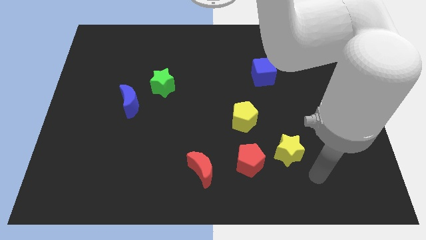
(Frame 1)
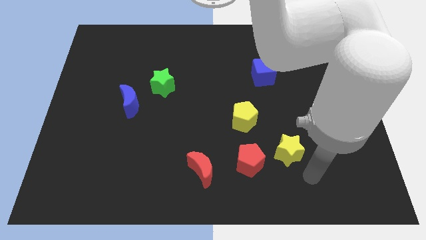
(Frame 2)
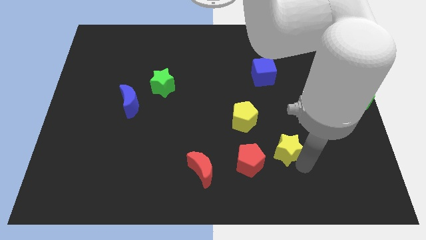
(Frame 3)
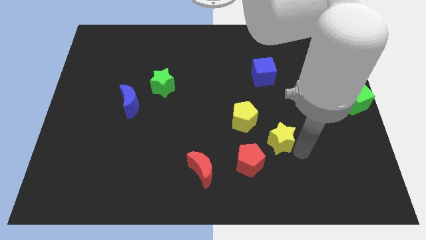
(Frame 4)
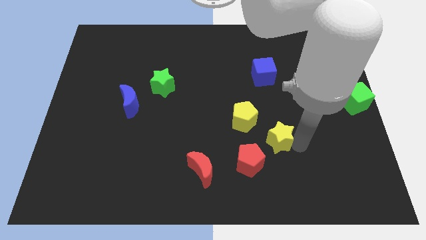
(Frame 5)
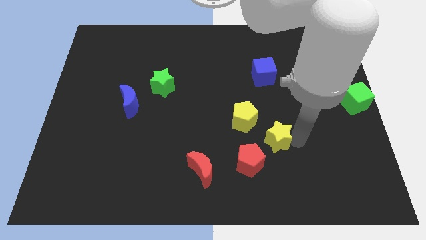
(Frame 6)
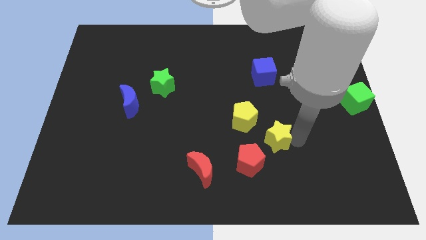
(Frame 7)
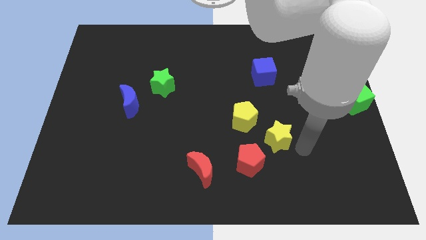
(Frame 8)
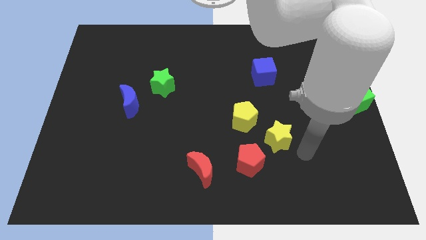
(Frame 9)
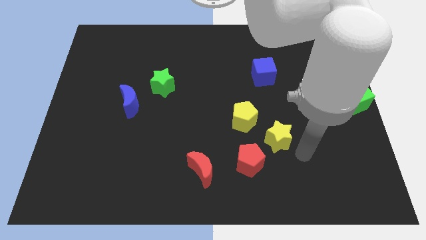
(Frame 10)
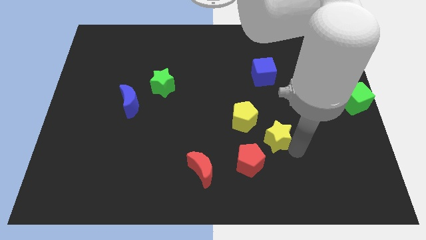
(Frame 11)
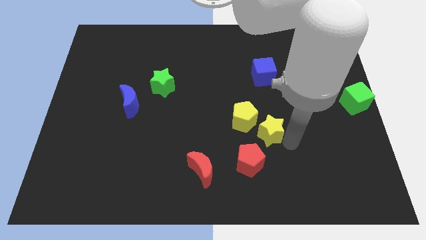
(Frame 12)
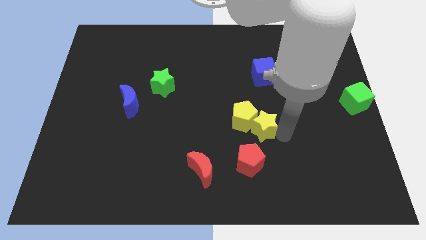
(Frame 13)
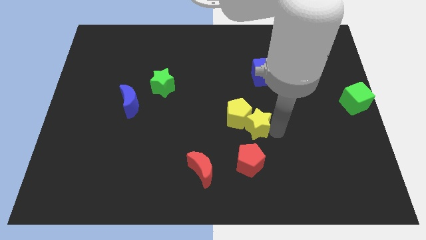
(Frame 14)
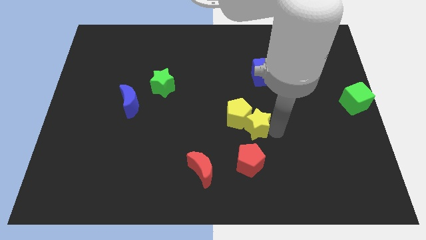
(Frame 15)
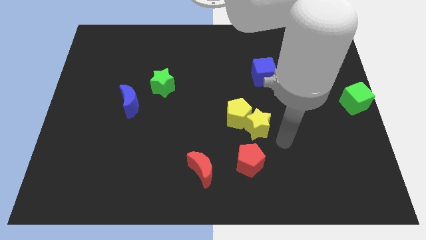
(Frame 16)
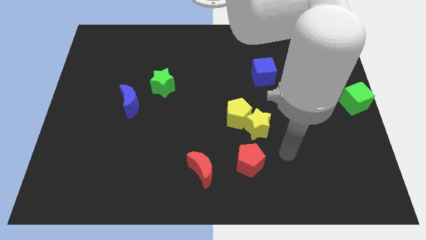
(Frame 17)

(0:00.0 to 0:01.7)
move the yellow star into the yellow pentagon

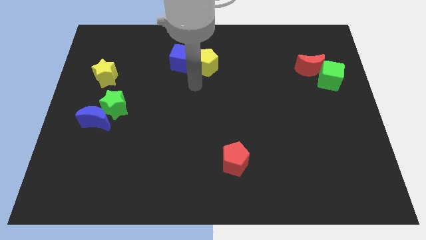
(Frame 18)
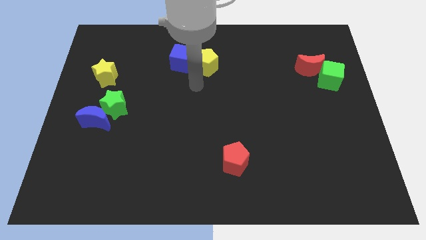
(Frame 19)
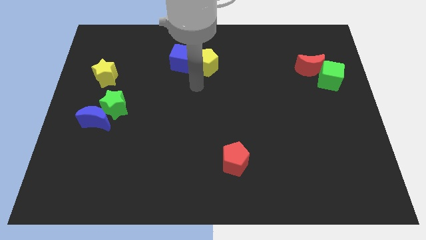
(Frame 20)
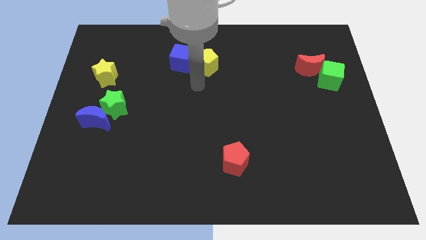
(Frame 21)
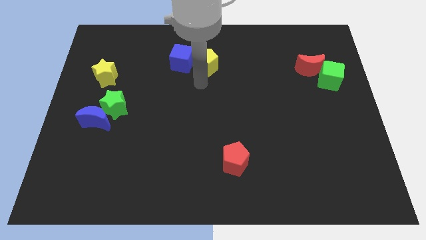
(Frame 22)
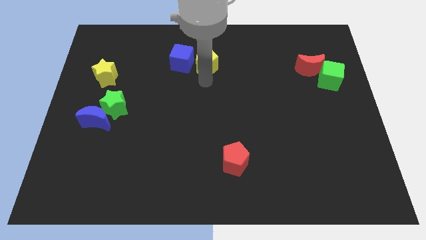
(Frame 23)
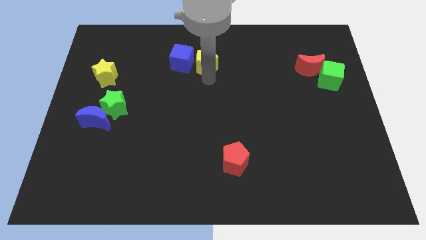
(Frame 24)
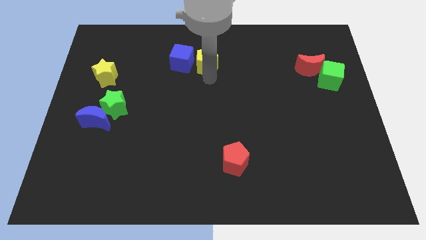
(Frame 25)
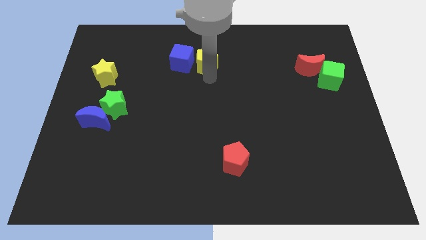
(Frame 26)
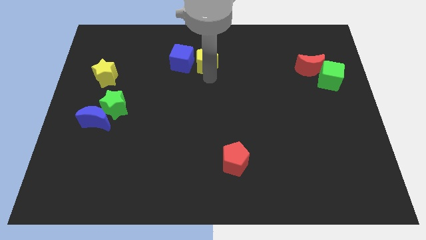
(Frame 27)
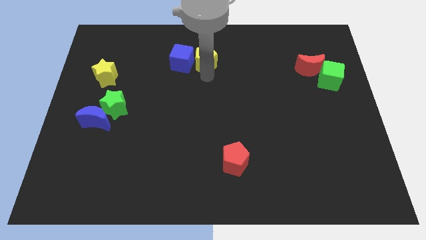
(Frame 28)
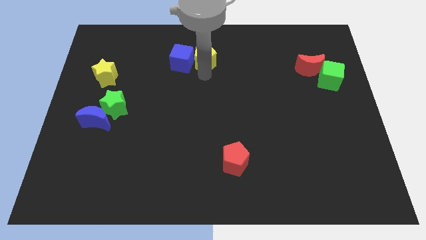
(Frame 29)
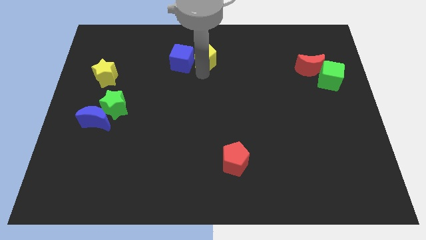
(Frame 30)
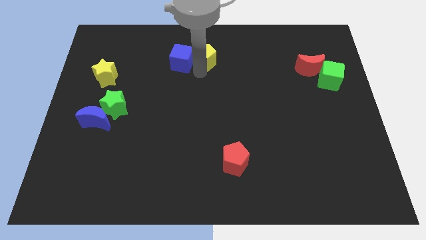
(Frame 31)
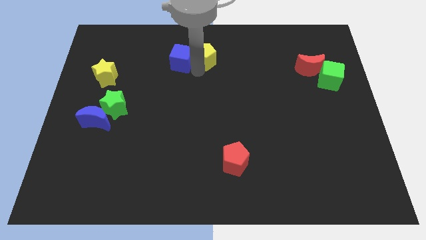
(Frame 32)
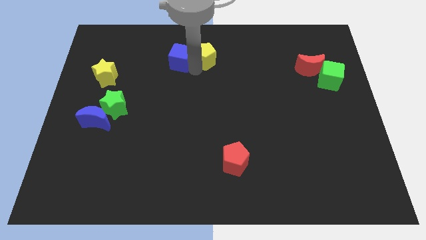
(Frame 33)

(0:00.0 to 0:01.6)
push the yellow pentagon slightly to the top

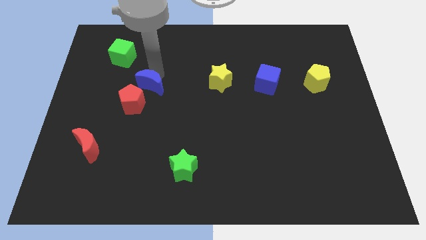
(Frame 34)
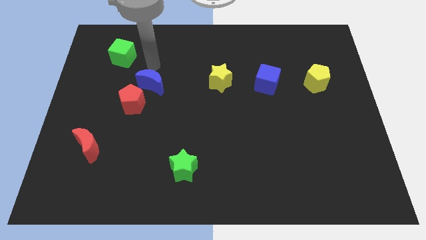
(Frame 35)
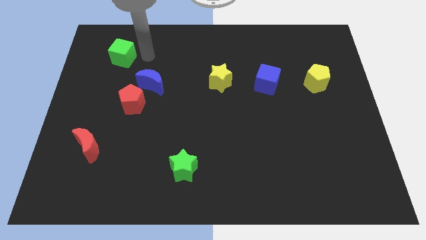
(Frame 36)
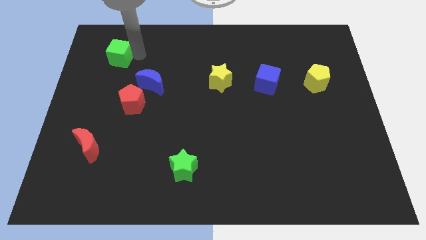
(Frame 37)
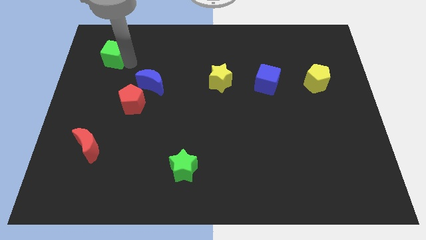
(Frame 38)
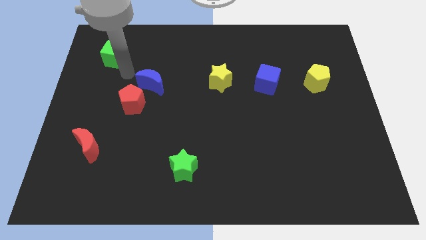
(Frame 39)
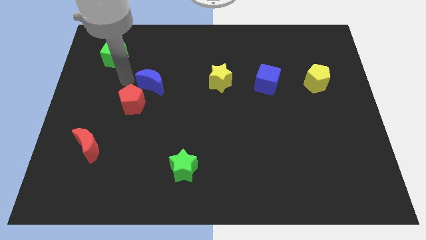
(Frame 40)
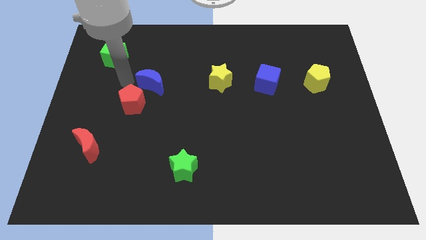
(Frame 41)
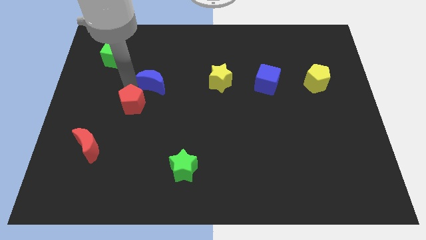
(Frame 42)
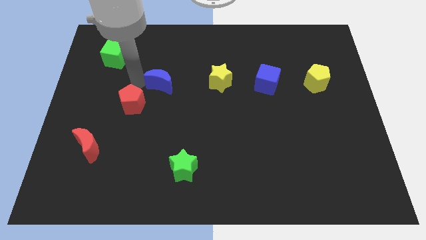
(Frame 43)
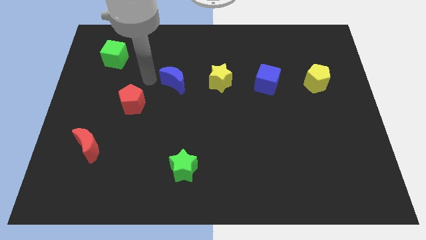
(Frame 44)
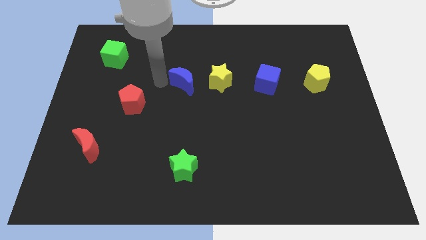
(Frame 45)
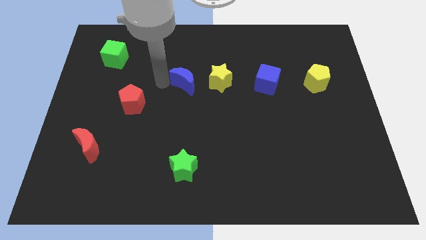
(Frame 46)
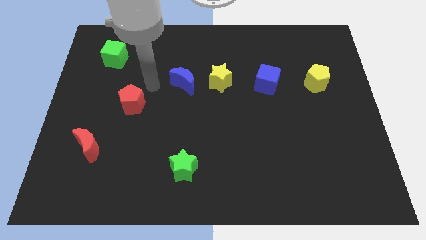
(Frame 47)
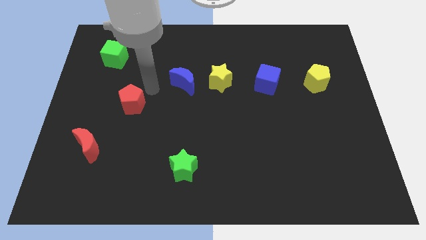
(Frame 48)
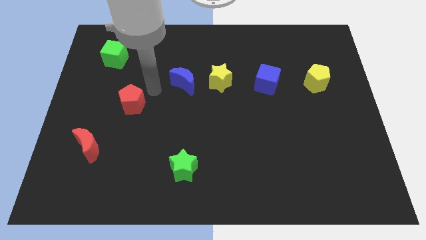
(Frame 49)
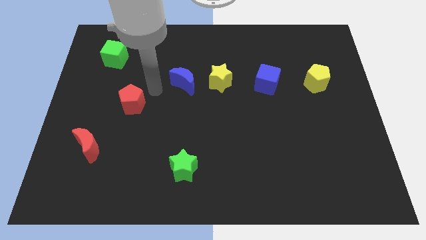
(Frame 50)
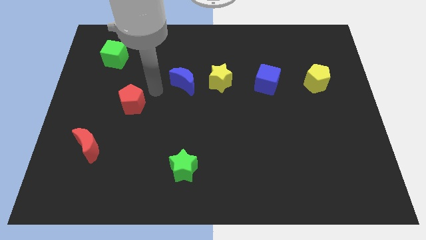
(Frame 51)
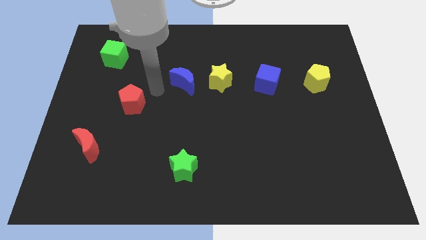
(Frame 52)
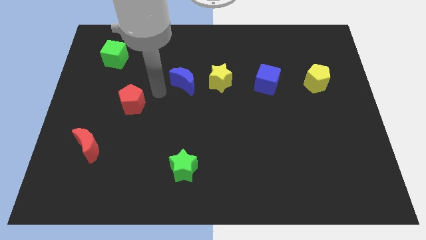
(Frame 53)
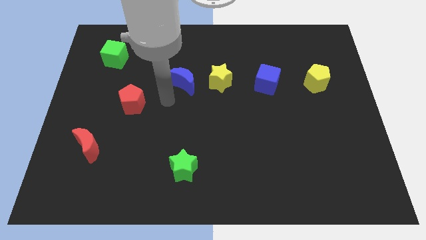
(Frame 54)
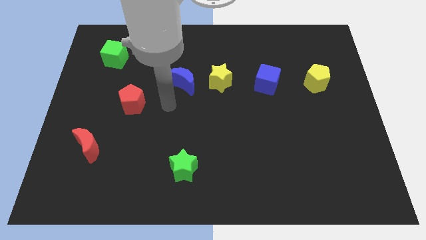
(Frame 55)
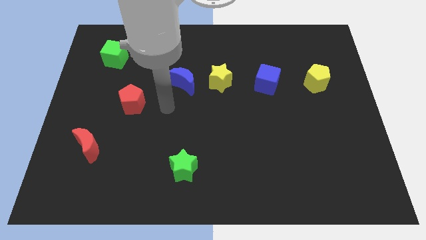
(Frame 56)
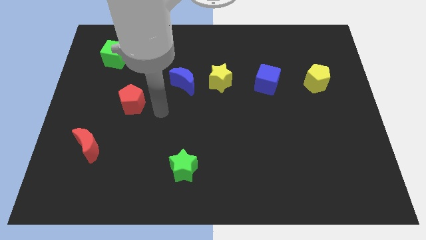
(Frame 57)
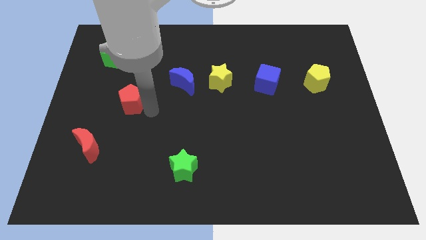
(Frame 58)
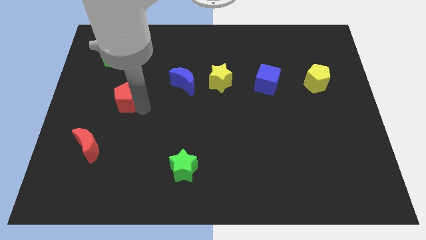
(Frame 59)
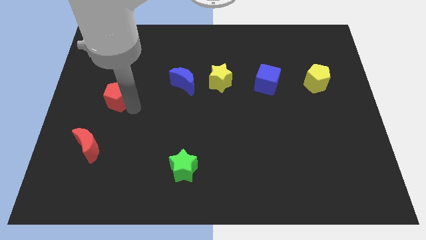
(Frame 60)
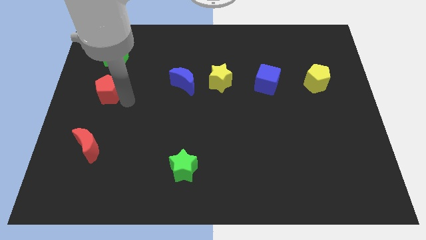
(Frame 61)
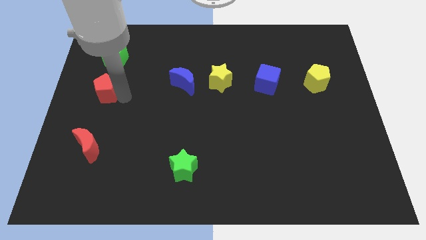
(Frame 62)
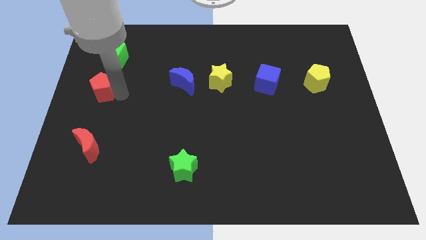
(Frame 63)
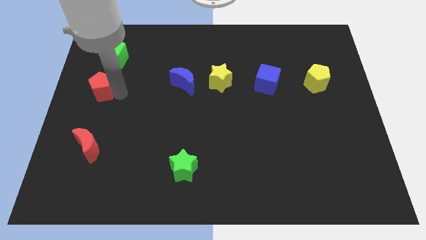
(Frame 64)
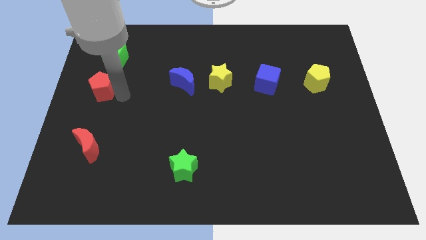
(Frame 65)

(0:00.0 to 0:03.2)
push red pentagon below green cube

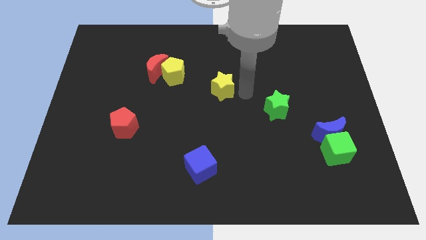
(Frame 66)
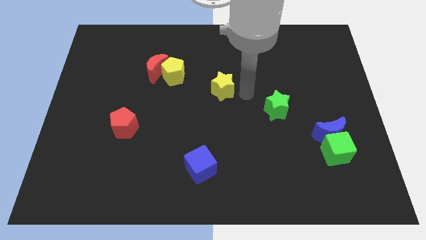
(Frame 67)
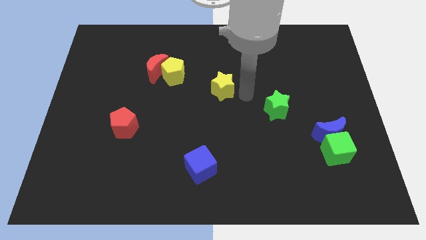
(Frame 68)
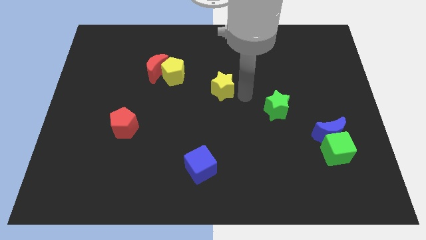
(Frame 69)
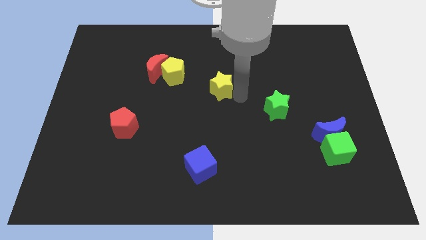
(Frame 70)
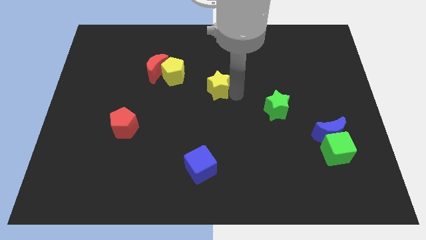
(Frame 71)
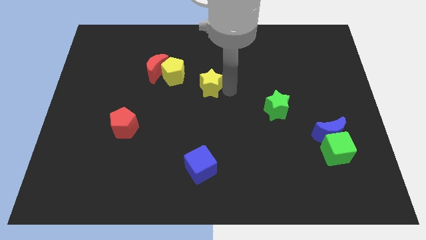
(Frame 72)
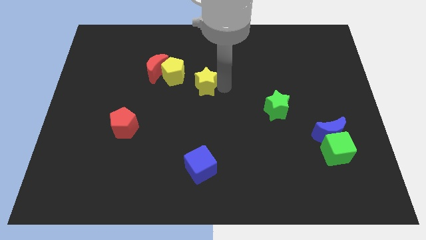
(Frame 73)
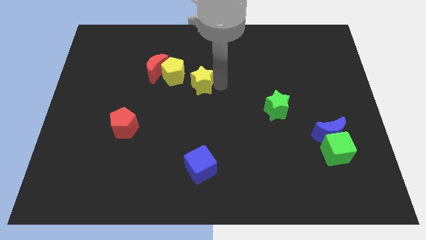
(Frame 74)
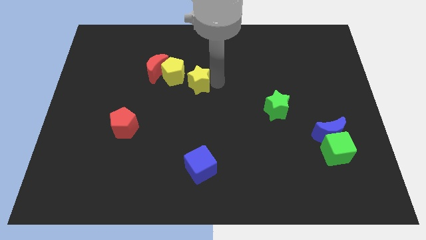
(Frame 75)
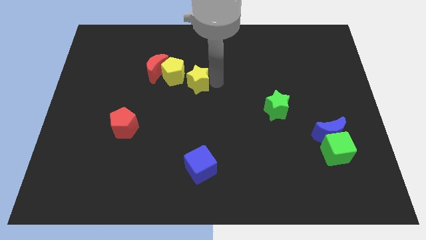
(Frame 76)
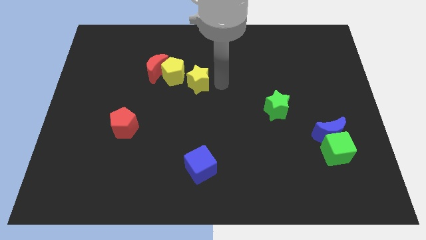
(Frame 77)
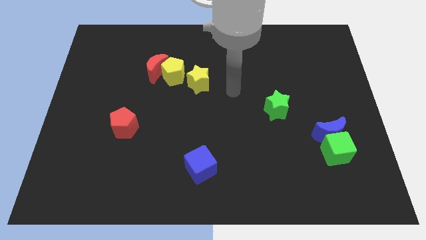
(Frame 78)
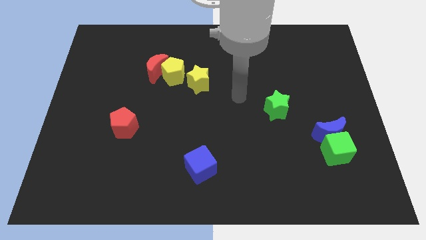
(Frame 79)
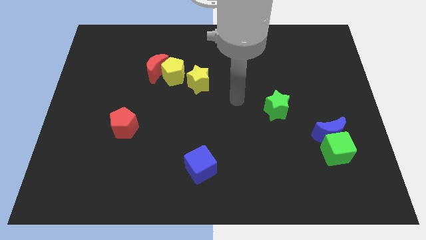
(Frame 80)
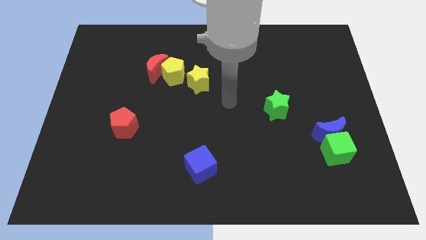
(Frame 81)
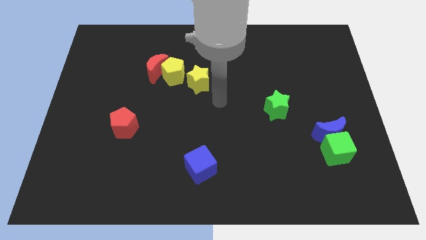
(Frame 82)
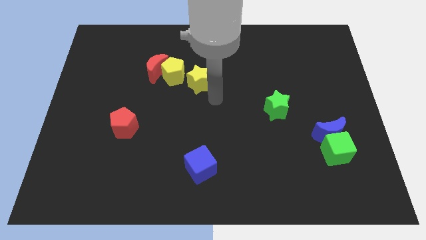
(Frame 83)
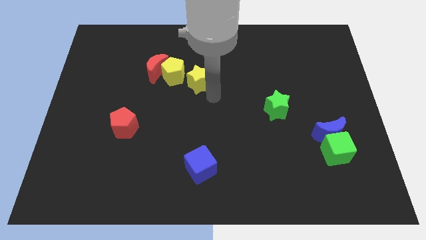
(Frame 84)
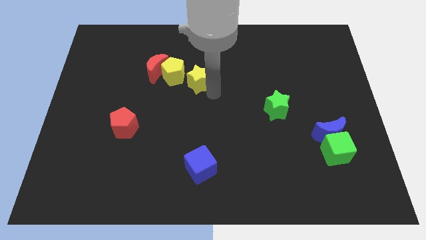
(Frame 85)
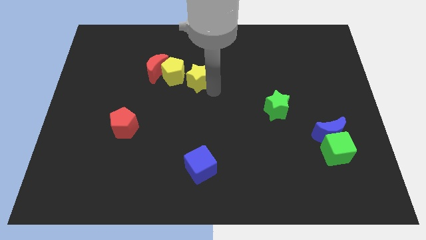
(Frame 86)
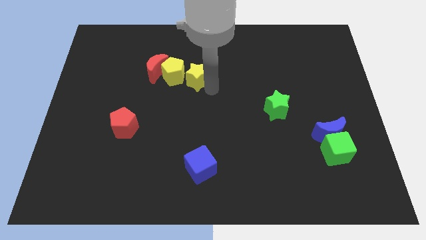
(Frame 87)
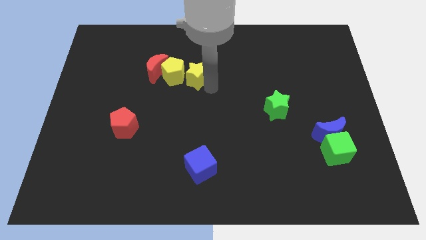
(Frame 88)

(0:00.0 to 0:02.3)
move the yellow star to the right side of the yellow pentagon

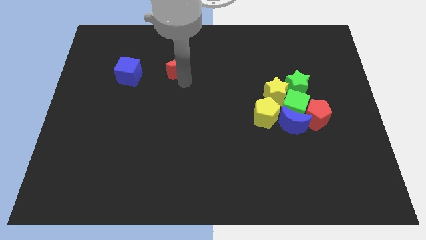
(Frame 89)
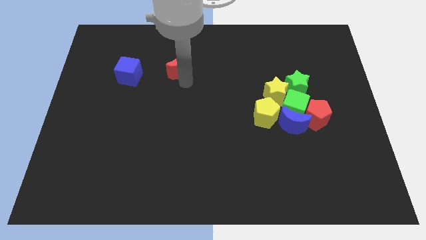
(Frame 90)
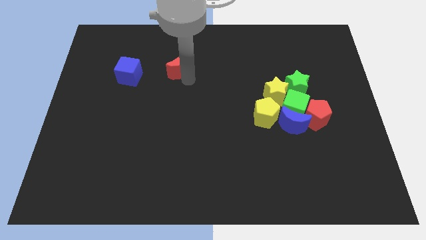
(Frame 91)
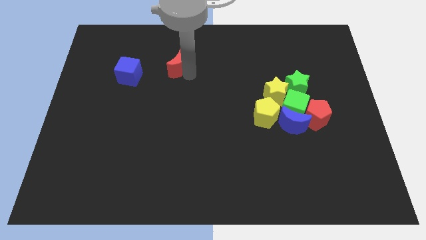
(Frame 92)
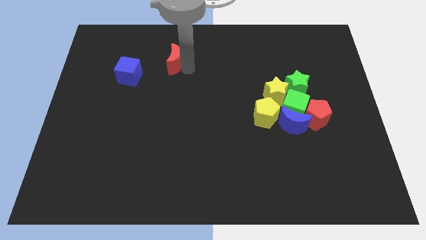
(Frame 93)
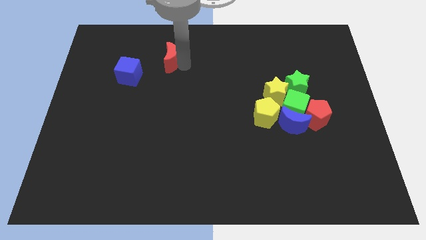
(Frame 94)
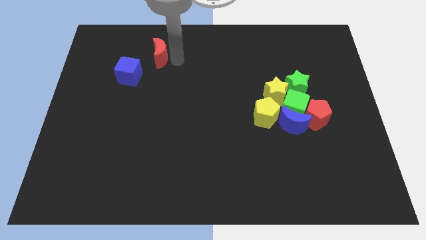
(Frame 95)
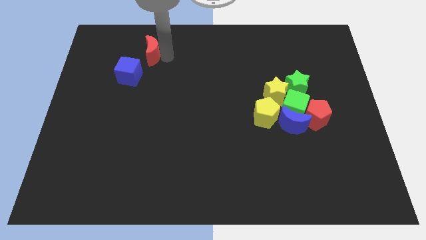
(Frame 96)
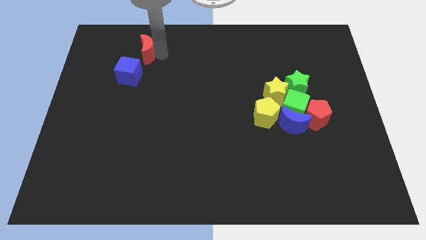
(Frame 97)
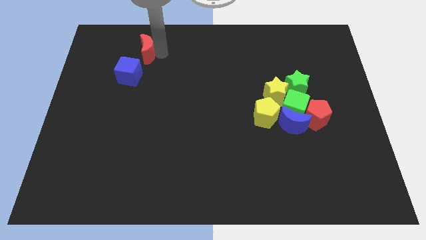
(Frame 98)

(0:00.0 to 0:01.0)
move the red moon above the blue cube
